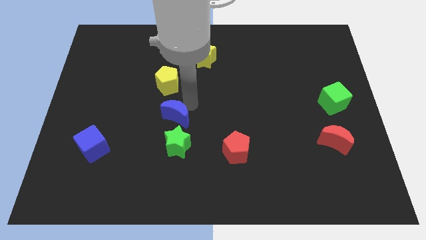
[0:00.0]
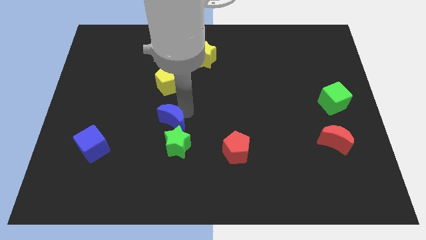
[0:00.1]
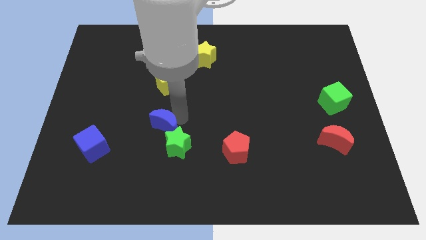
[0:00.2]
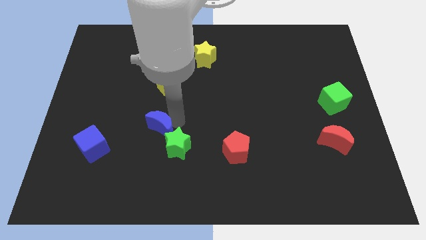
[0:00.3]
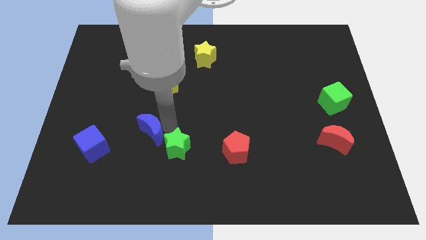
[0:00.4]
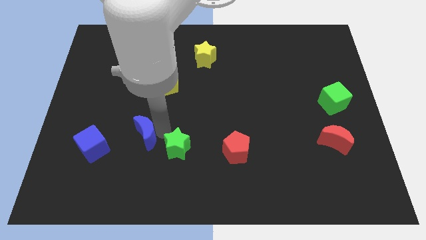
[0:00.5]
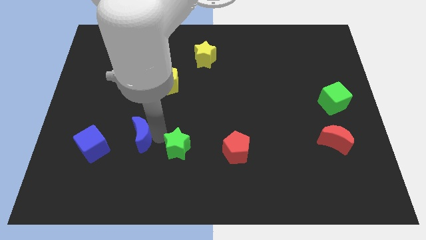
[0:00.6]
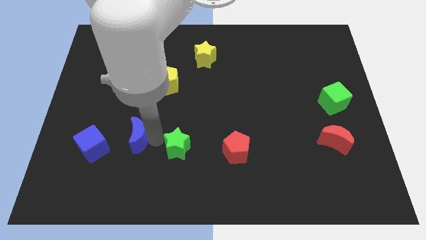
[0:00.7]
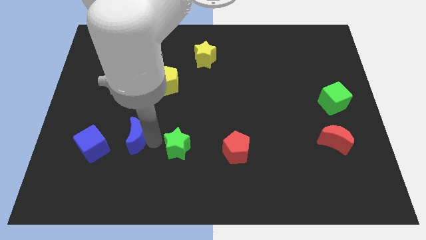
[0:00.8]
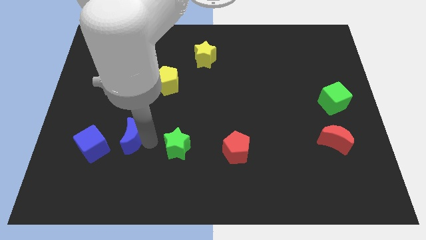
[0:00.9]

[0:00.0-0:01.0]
slightly push the green star with blue crescent on the bottom left of the board

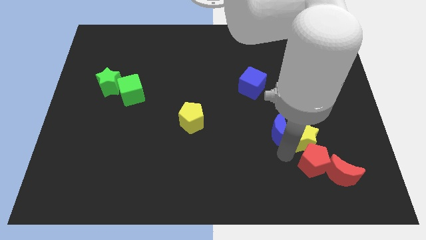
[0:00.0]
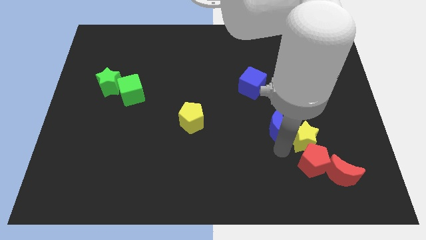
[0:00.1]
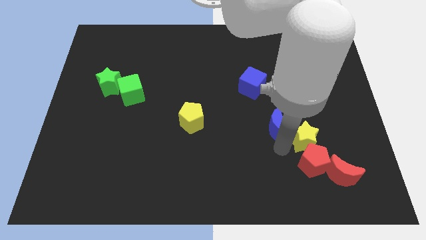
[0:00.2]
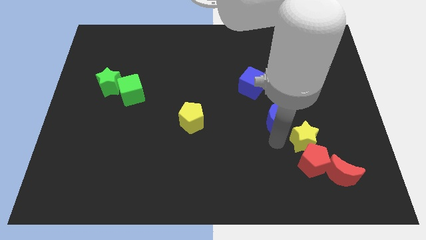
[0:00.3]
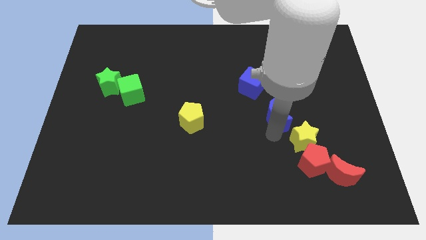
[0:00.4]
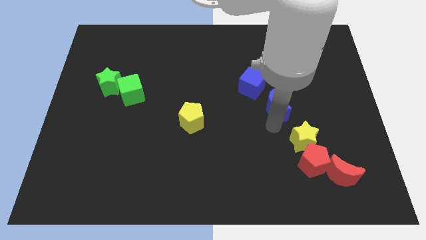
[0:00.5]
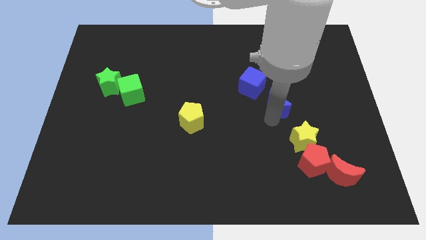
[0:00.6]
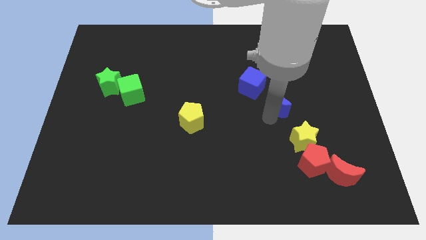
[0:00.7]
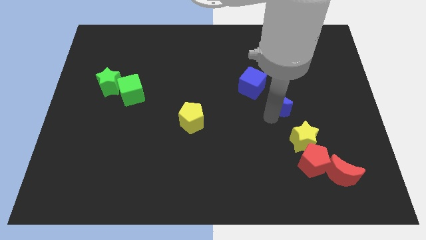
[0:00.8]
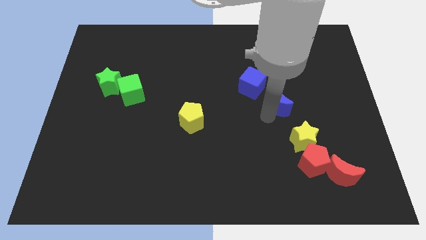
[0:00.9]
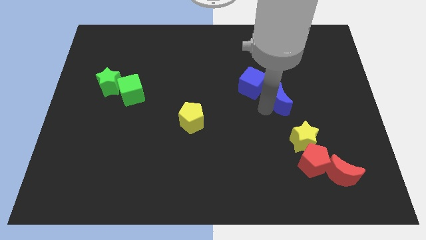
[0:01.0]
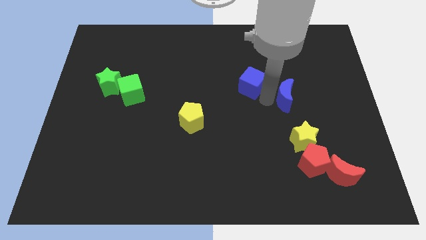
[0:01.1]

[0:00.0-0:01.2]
push the blue crescent to the right of the blue cube

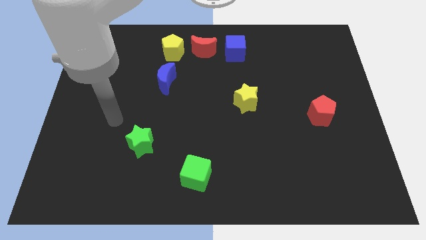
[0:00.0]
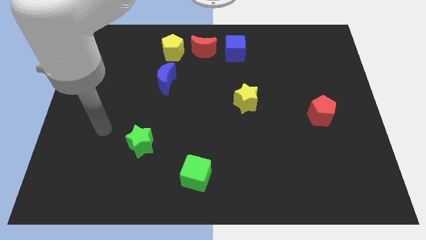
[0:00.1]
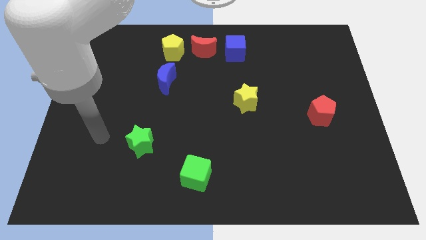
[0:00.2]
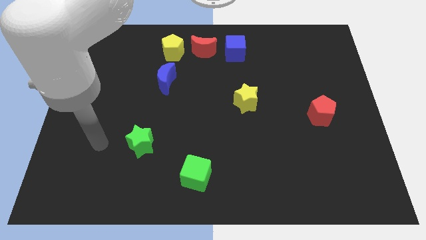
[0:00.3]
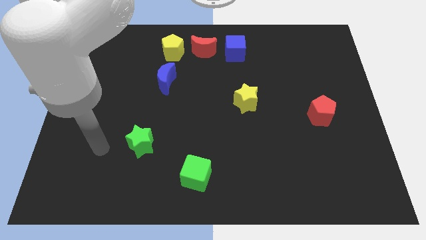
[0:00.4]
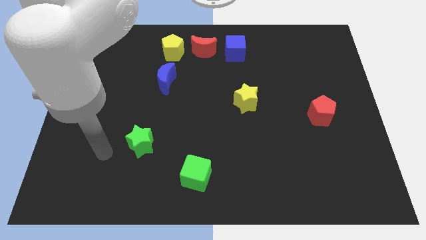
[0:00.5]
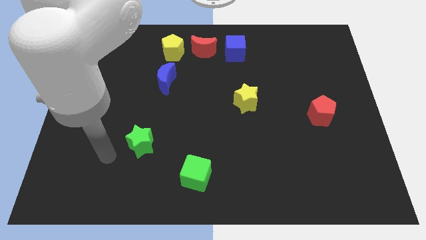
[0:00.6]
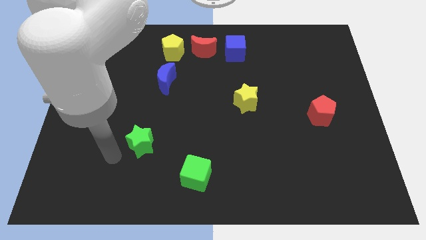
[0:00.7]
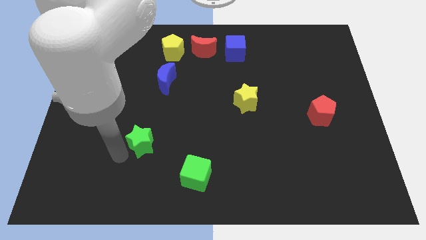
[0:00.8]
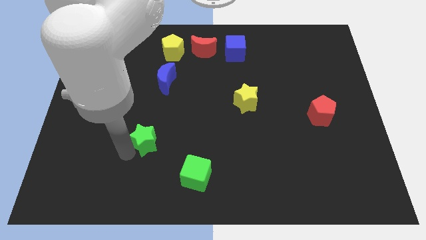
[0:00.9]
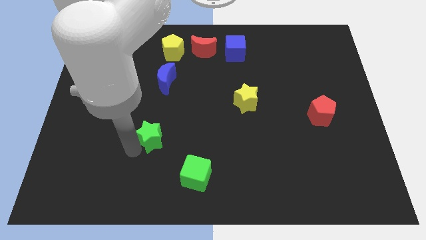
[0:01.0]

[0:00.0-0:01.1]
touch the bottom of green star

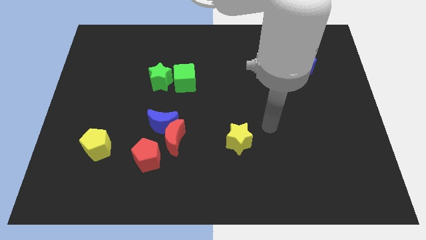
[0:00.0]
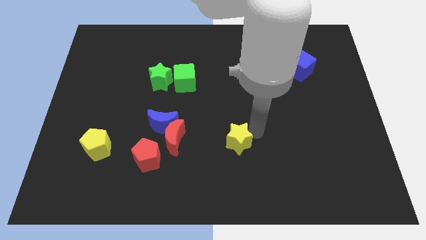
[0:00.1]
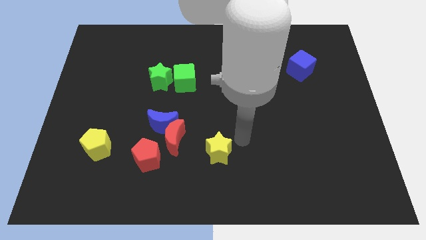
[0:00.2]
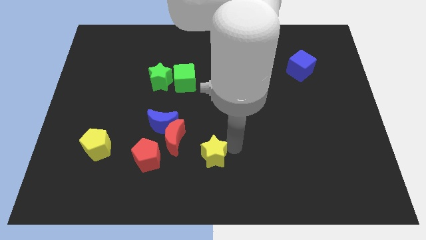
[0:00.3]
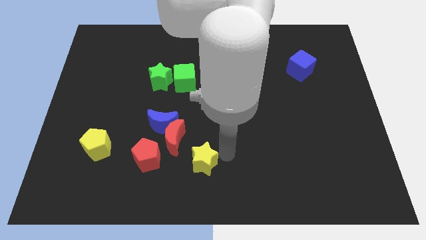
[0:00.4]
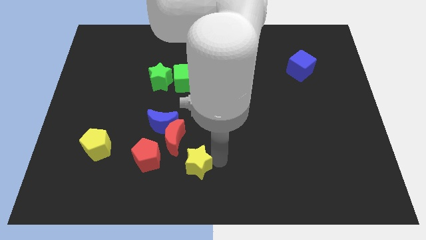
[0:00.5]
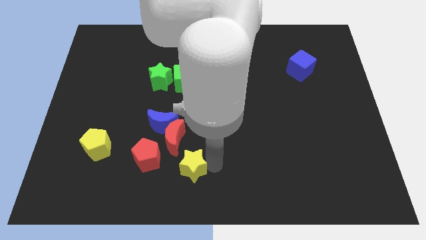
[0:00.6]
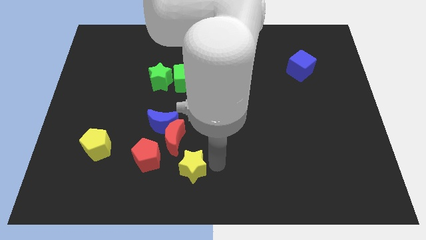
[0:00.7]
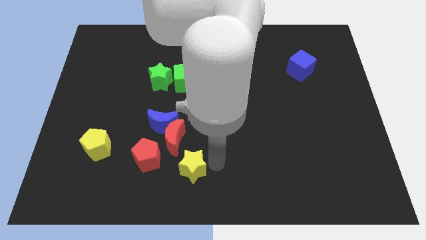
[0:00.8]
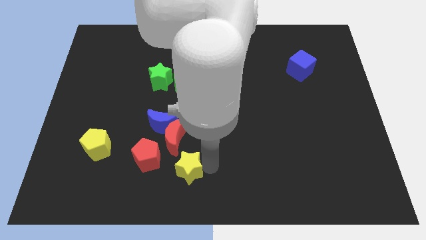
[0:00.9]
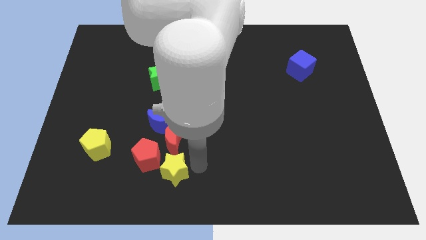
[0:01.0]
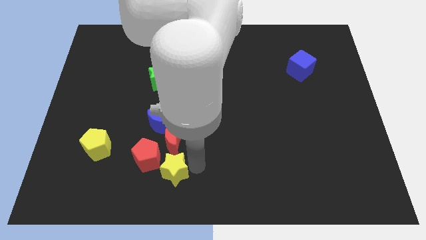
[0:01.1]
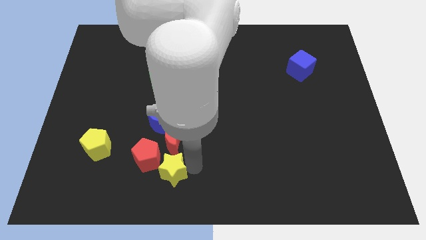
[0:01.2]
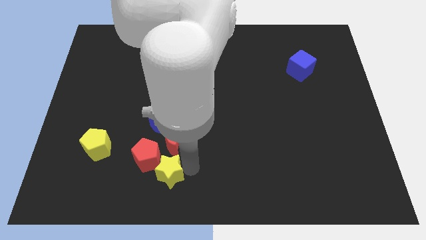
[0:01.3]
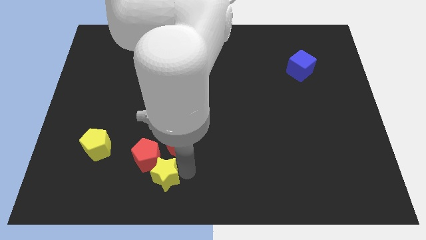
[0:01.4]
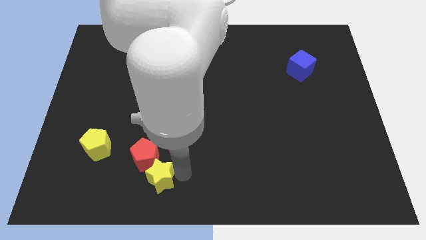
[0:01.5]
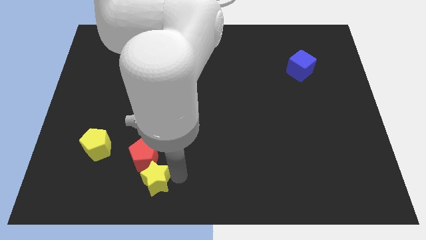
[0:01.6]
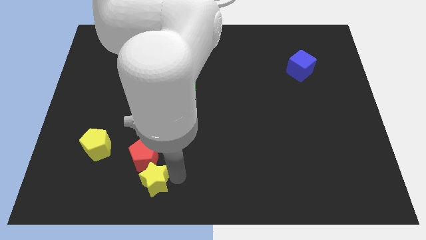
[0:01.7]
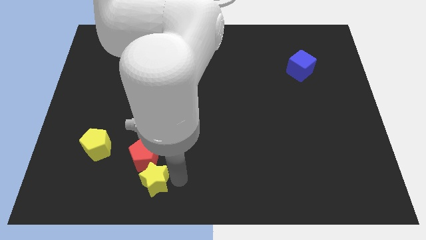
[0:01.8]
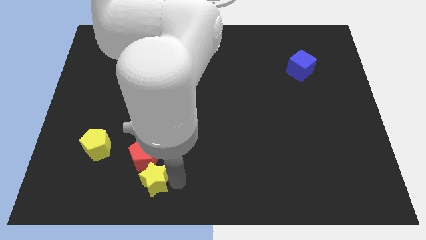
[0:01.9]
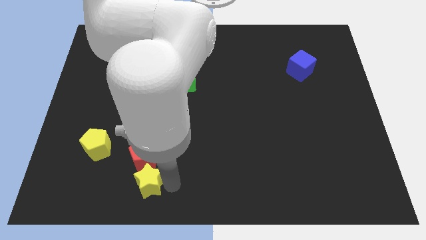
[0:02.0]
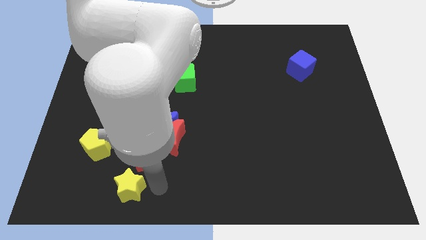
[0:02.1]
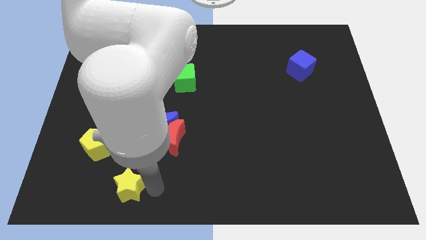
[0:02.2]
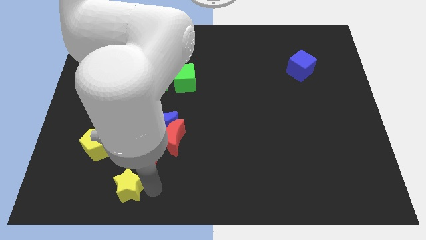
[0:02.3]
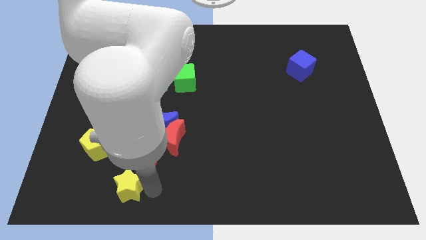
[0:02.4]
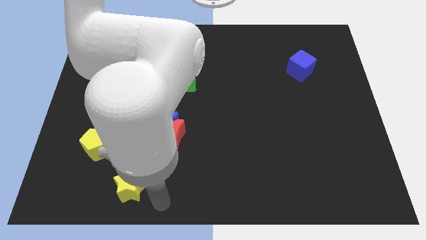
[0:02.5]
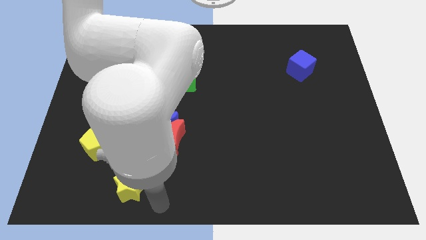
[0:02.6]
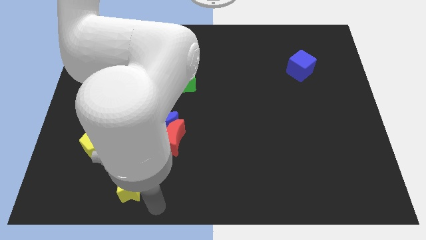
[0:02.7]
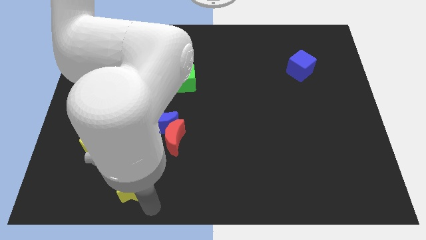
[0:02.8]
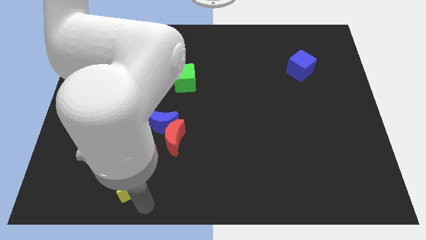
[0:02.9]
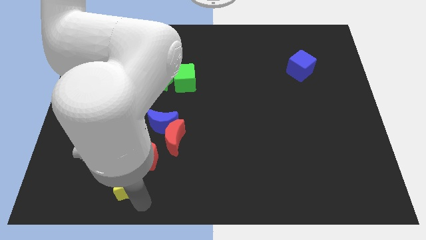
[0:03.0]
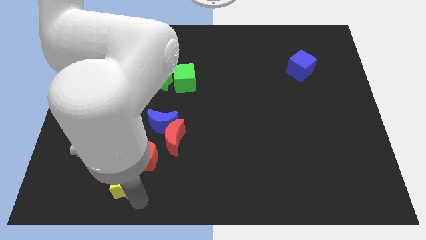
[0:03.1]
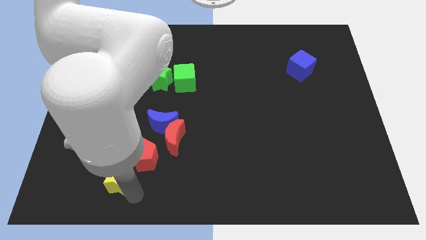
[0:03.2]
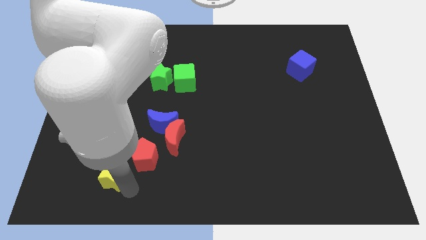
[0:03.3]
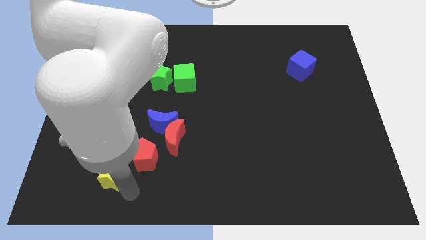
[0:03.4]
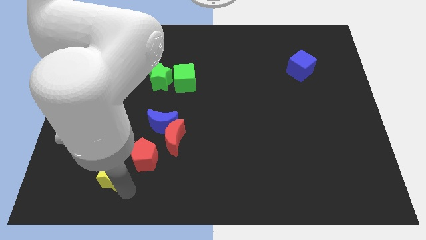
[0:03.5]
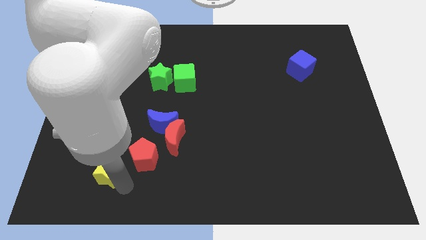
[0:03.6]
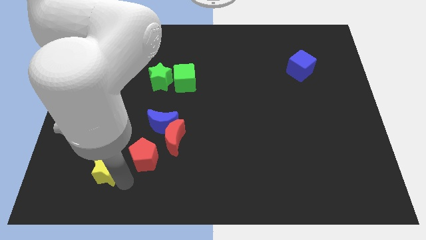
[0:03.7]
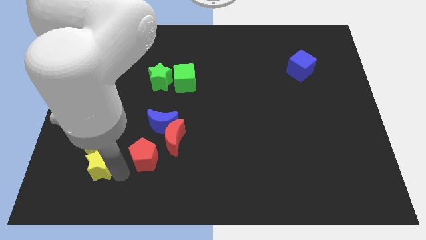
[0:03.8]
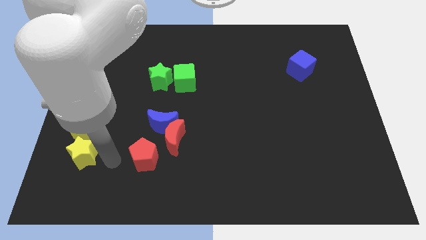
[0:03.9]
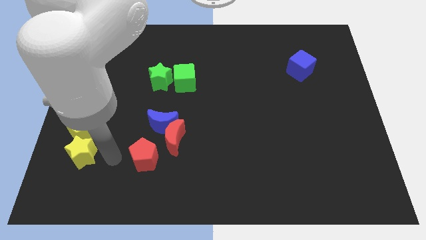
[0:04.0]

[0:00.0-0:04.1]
place the yellow star below yellow pentagon

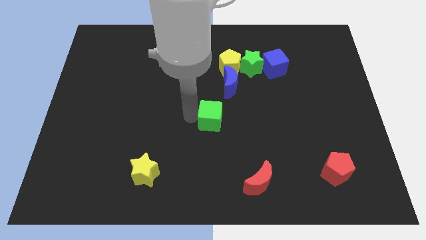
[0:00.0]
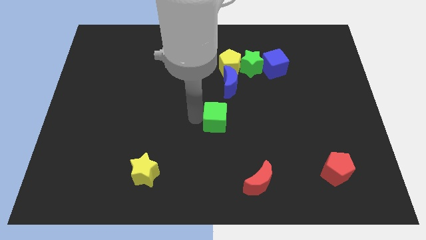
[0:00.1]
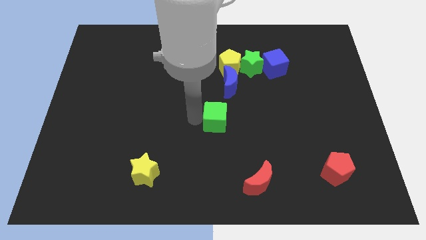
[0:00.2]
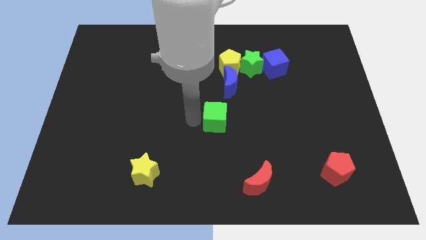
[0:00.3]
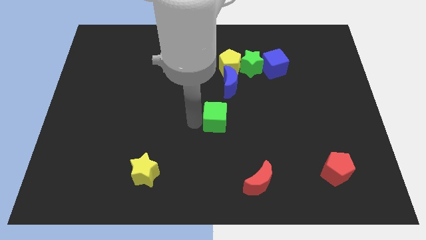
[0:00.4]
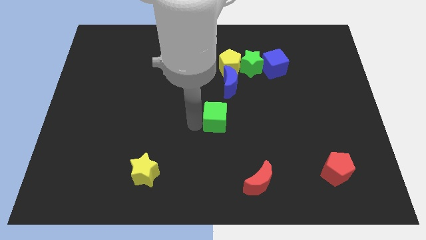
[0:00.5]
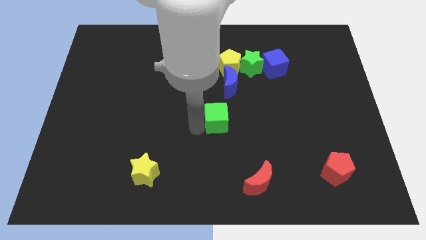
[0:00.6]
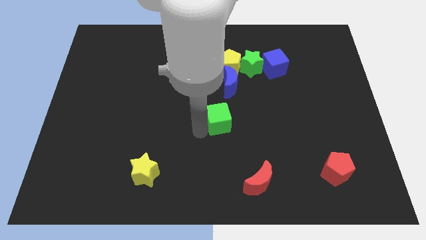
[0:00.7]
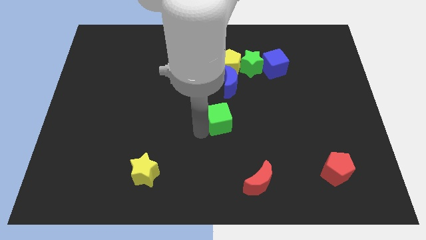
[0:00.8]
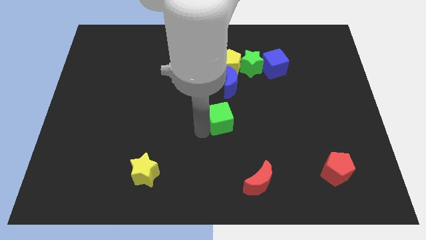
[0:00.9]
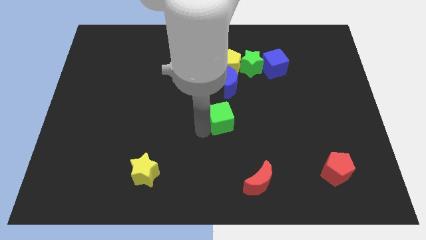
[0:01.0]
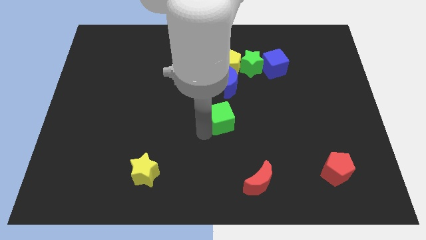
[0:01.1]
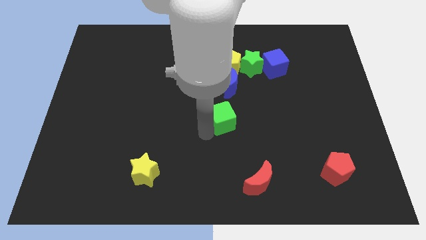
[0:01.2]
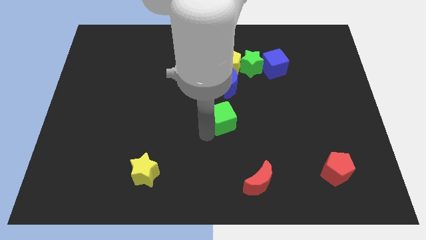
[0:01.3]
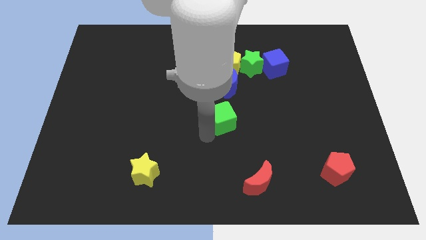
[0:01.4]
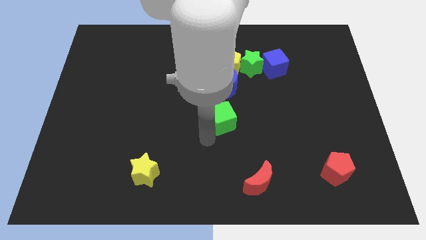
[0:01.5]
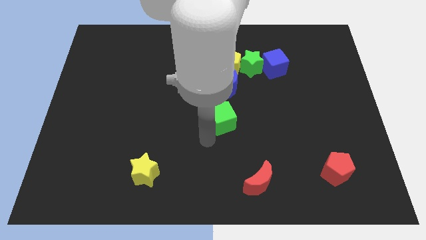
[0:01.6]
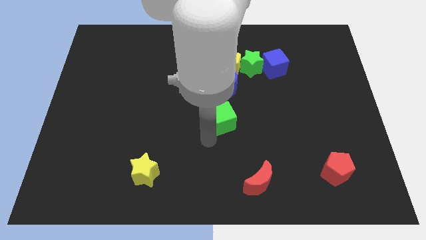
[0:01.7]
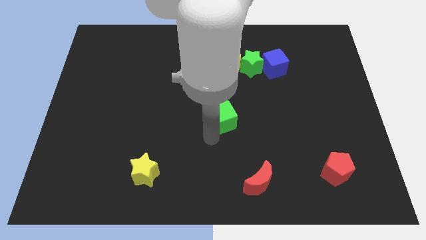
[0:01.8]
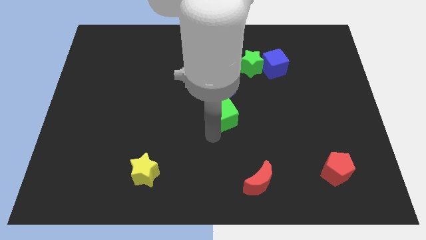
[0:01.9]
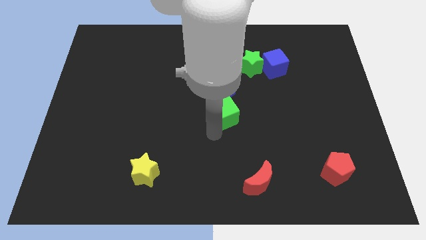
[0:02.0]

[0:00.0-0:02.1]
place the green cube below the blue crescent
